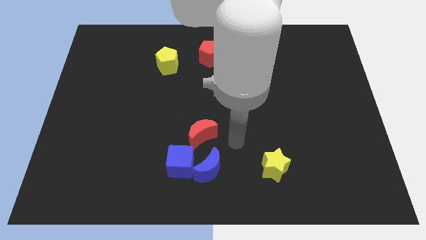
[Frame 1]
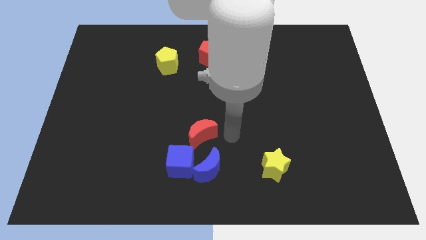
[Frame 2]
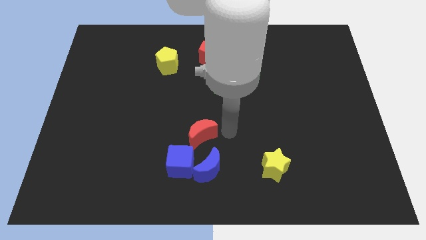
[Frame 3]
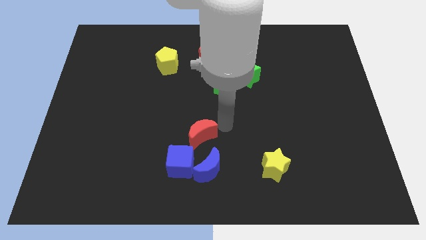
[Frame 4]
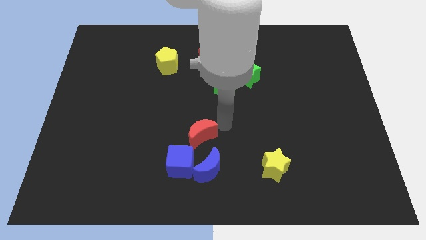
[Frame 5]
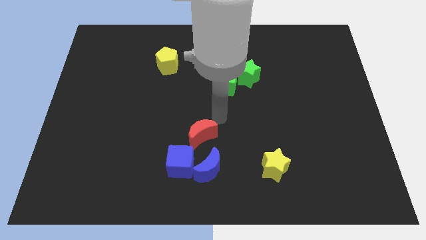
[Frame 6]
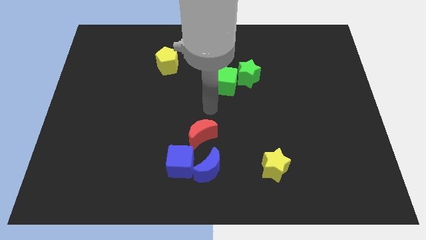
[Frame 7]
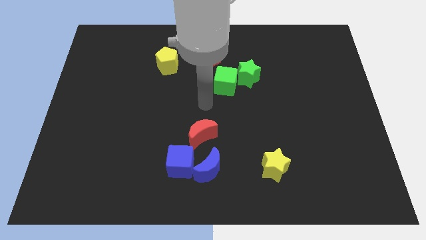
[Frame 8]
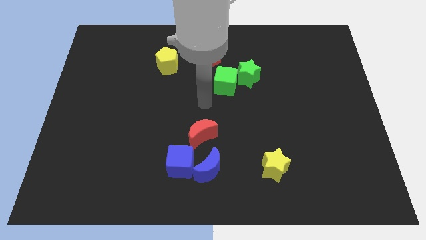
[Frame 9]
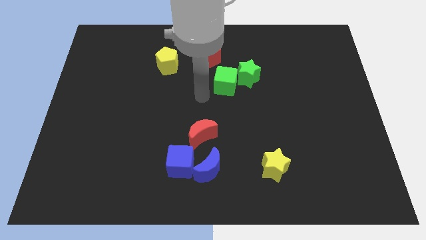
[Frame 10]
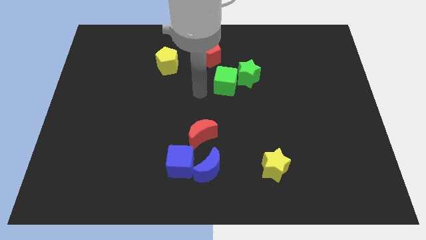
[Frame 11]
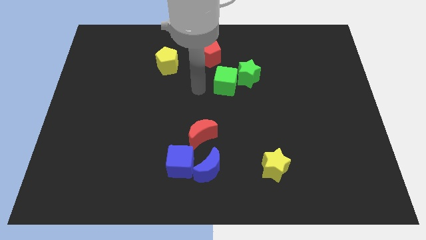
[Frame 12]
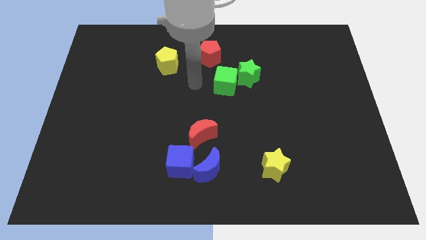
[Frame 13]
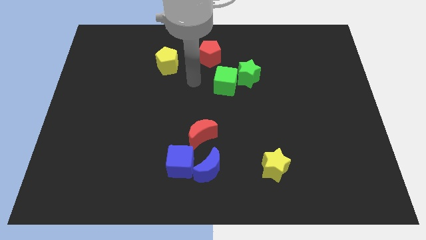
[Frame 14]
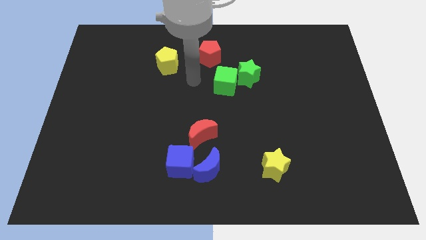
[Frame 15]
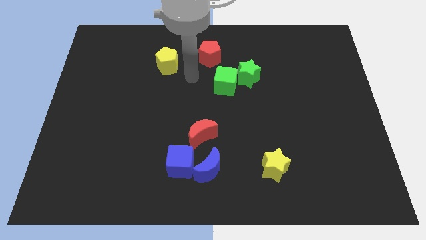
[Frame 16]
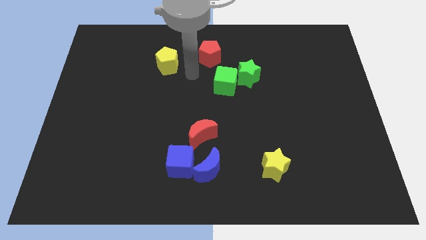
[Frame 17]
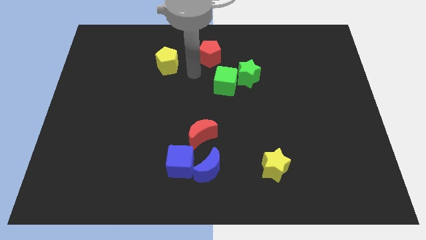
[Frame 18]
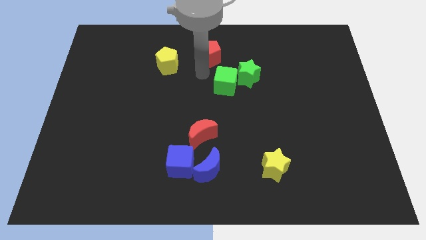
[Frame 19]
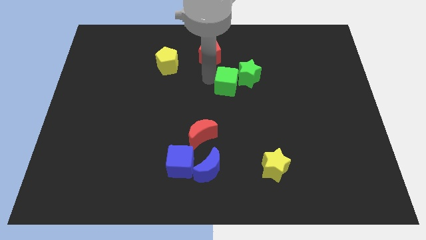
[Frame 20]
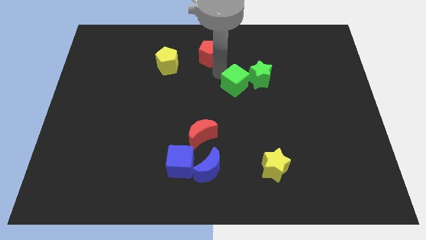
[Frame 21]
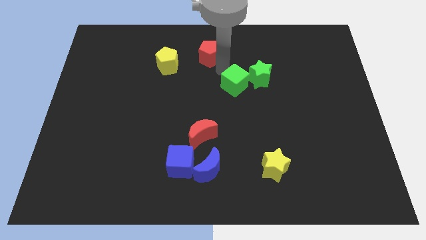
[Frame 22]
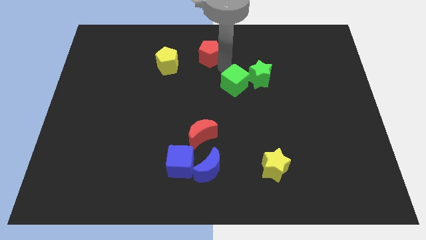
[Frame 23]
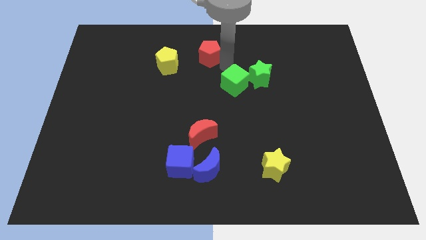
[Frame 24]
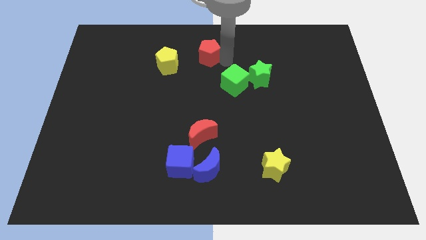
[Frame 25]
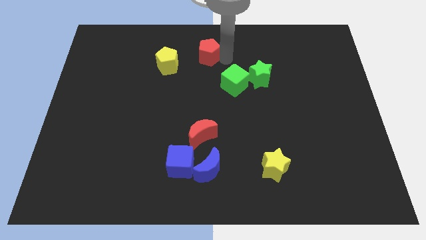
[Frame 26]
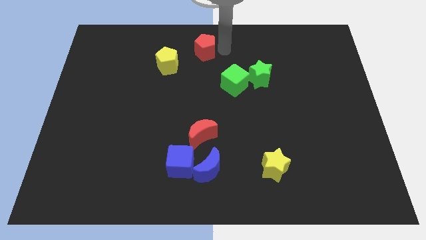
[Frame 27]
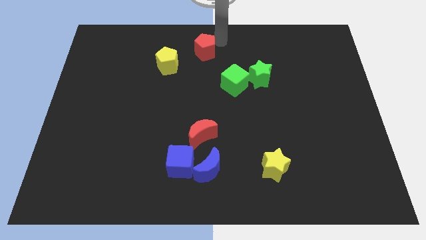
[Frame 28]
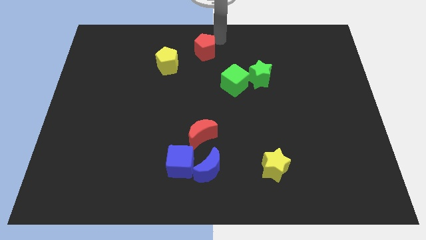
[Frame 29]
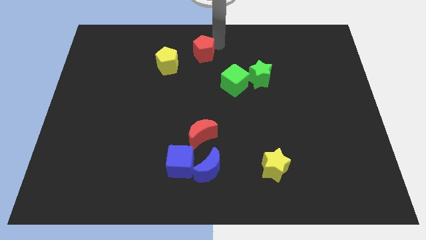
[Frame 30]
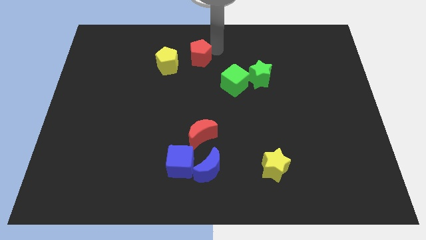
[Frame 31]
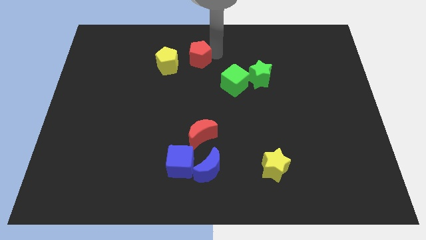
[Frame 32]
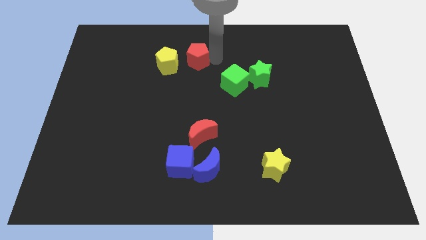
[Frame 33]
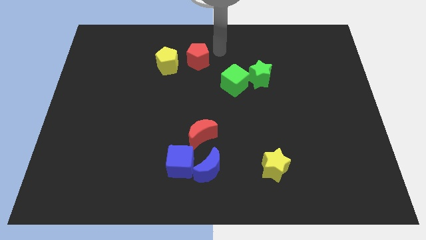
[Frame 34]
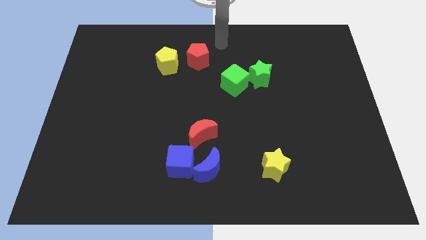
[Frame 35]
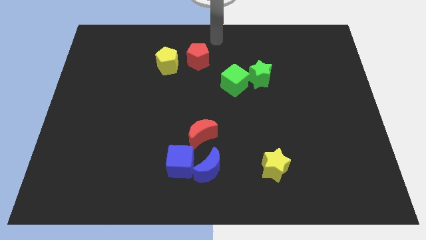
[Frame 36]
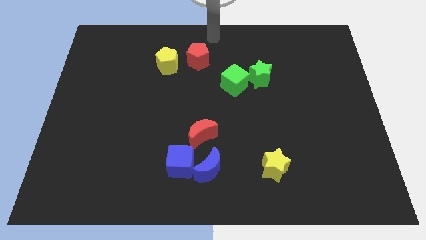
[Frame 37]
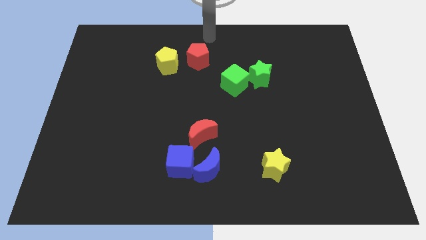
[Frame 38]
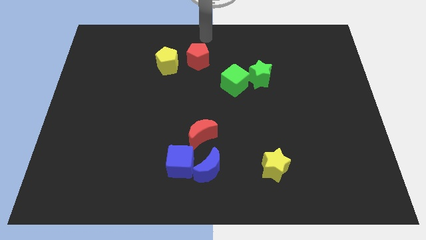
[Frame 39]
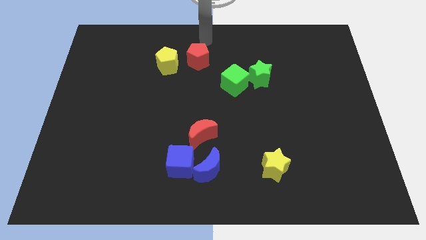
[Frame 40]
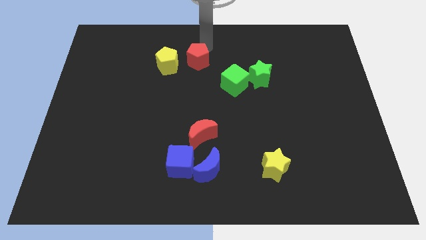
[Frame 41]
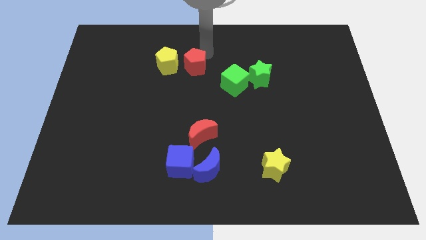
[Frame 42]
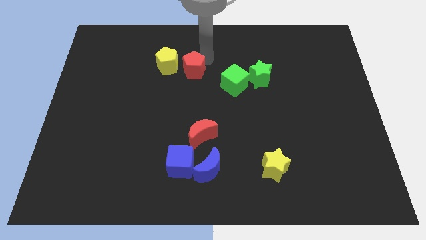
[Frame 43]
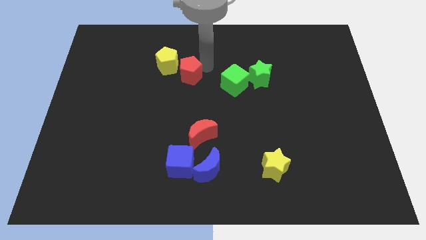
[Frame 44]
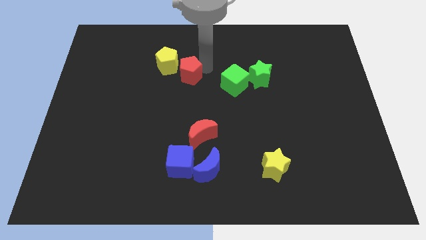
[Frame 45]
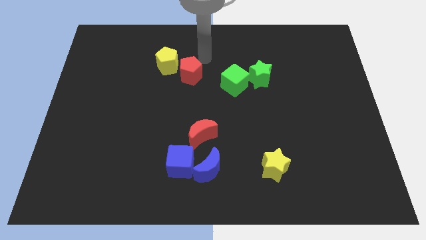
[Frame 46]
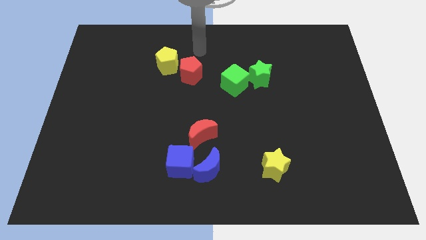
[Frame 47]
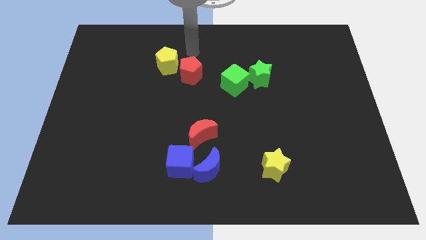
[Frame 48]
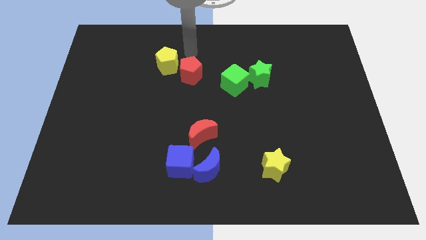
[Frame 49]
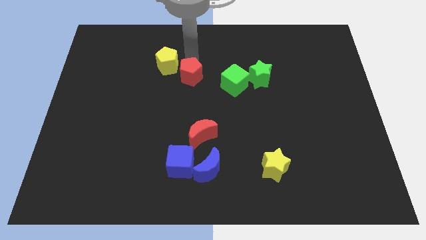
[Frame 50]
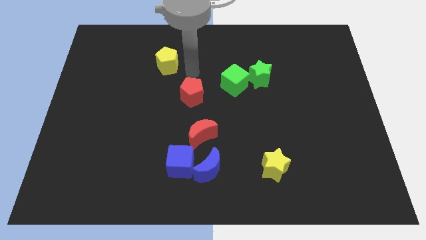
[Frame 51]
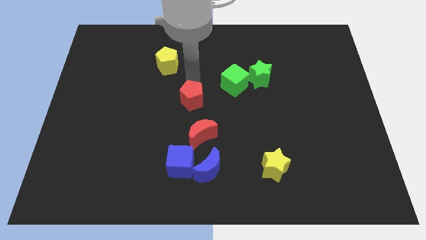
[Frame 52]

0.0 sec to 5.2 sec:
push the red pentagon downward

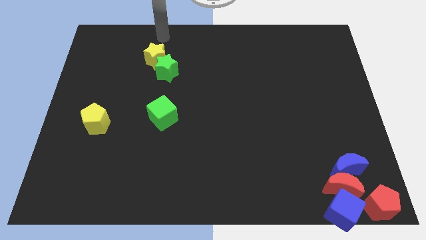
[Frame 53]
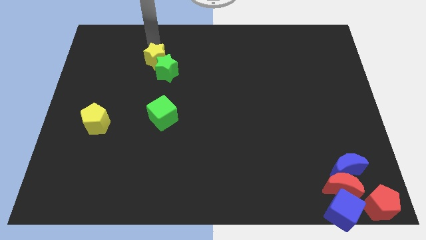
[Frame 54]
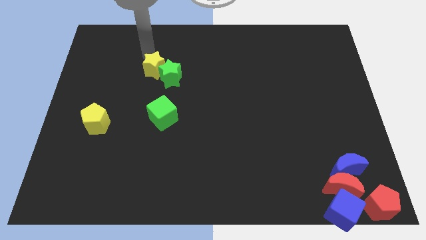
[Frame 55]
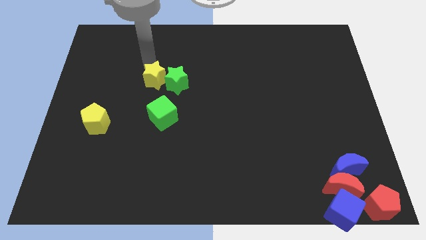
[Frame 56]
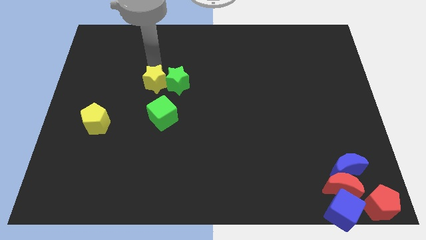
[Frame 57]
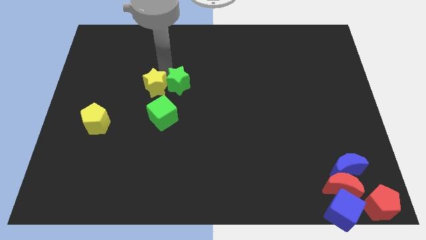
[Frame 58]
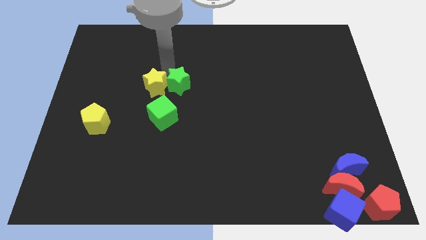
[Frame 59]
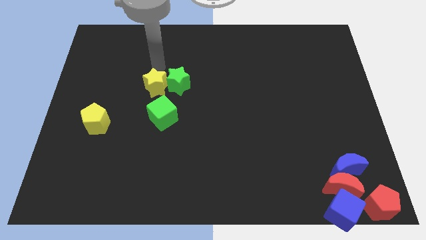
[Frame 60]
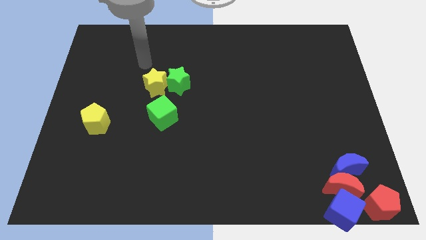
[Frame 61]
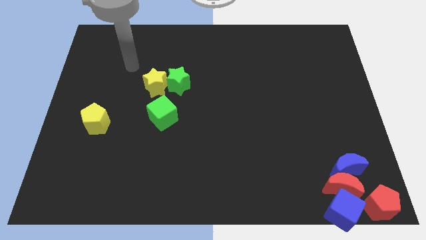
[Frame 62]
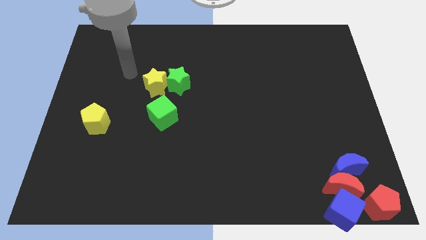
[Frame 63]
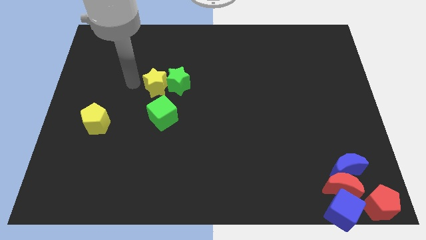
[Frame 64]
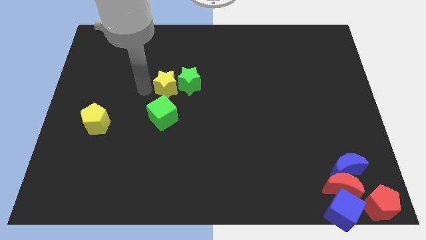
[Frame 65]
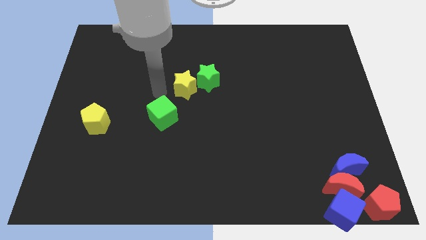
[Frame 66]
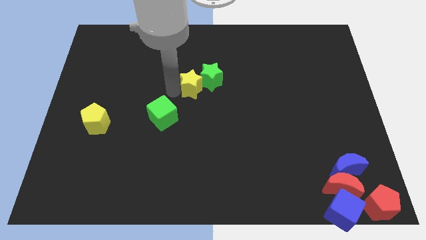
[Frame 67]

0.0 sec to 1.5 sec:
move the green and yellow stars together towards the center of the board

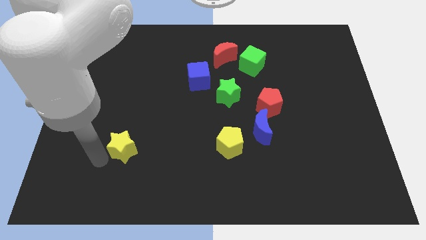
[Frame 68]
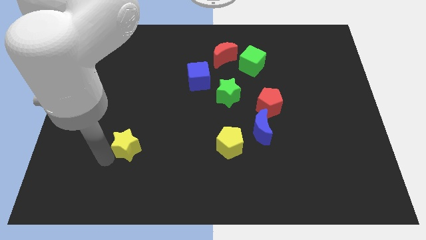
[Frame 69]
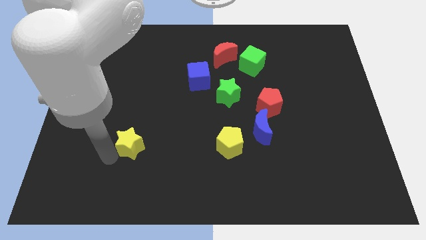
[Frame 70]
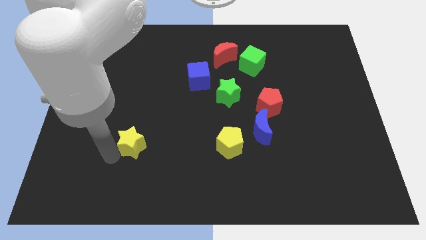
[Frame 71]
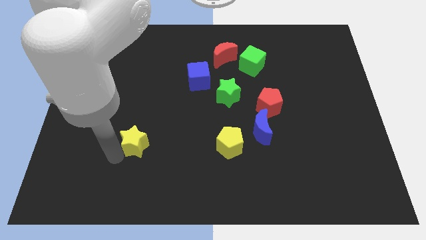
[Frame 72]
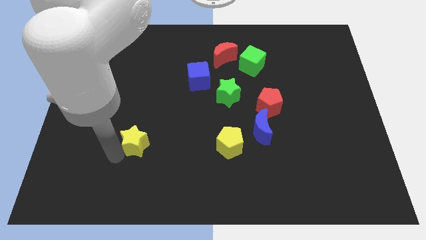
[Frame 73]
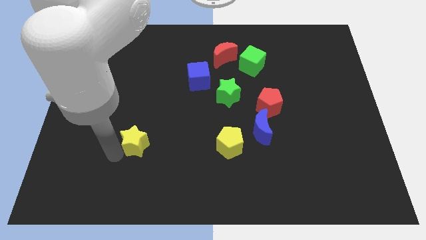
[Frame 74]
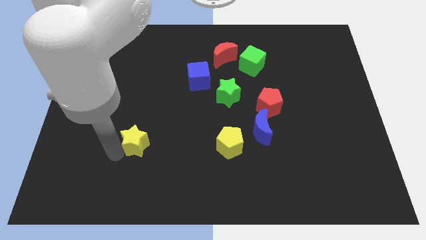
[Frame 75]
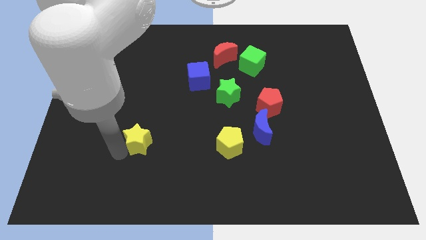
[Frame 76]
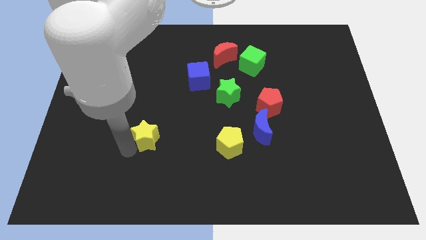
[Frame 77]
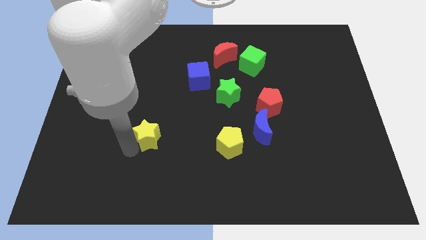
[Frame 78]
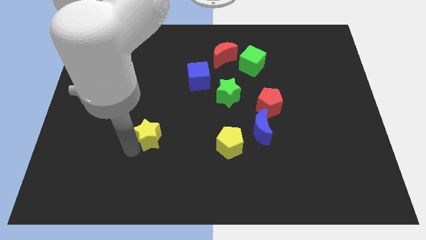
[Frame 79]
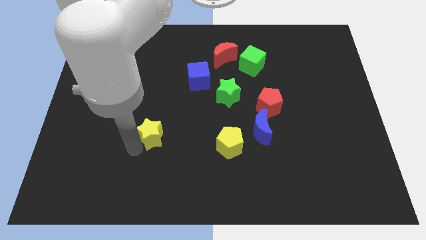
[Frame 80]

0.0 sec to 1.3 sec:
slide the yellow star towards the yellow pentagon

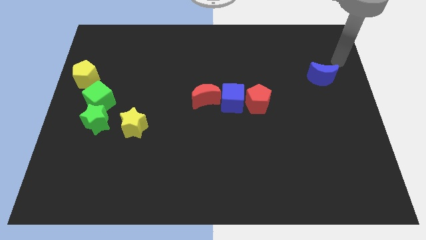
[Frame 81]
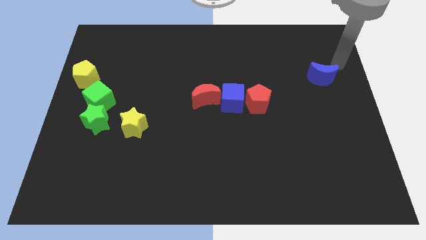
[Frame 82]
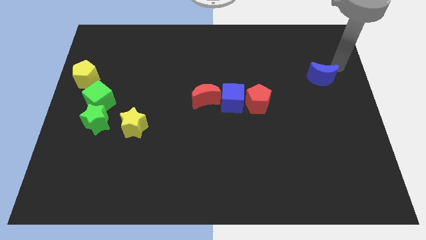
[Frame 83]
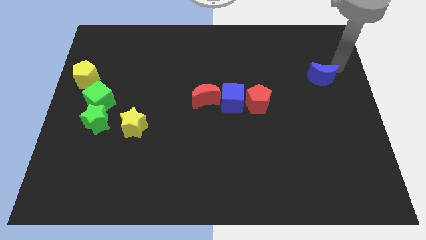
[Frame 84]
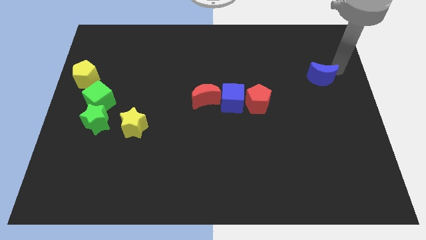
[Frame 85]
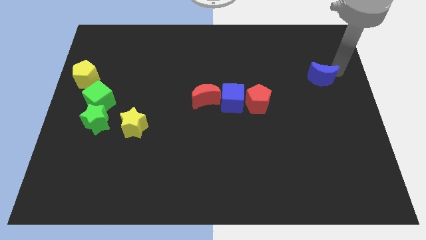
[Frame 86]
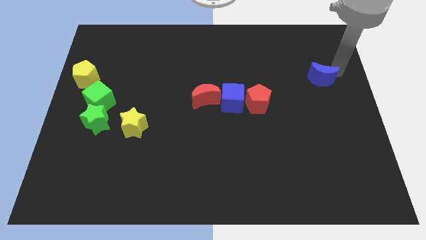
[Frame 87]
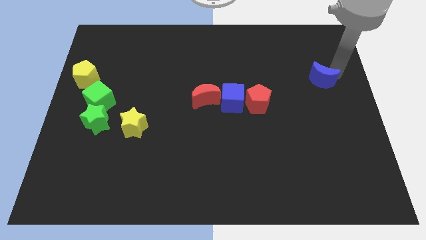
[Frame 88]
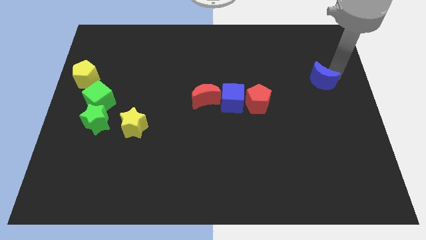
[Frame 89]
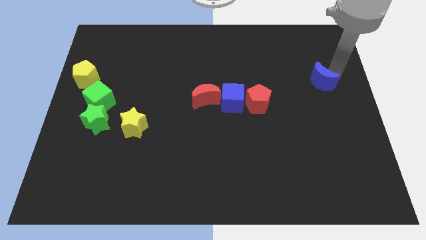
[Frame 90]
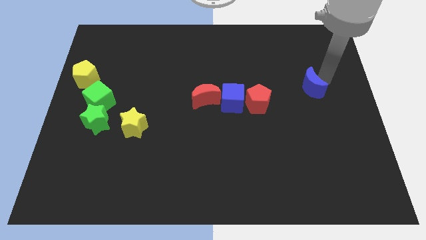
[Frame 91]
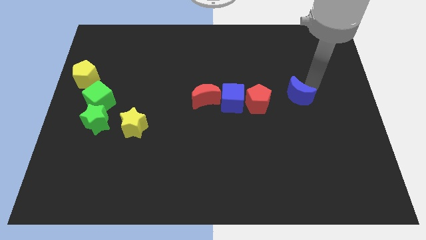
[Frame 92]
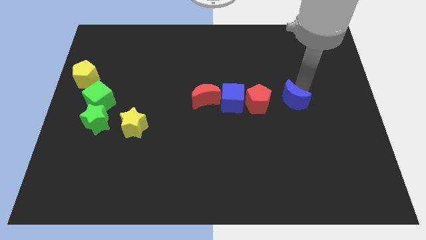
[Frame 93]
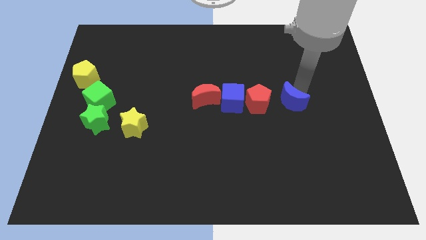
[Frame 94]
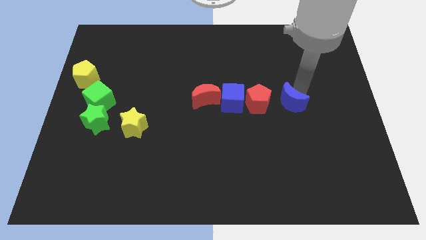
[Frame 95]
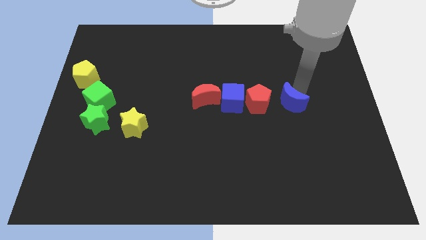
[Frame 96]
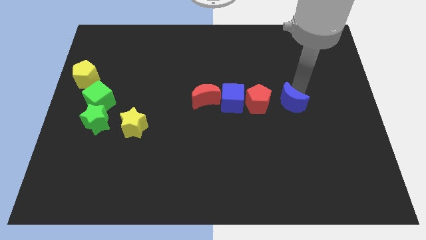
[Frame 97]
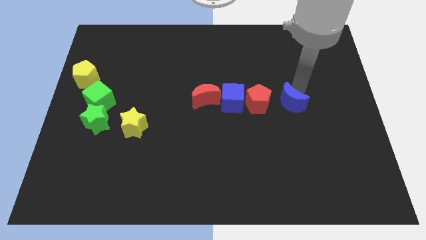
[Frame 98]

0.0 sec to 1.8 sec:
push the blue crescent to the right of the red pentagon
